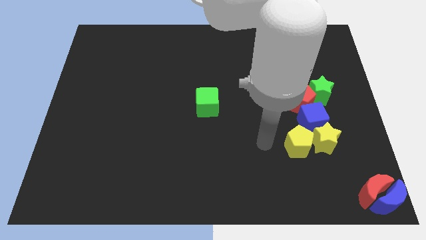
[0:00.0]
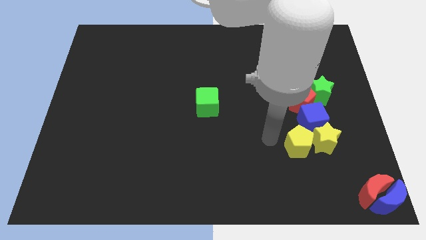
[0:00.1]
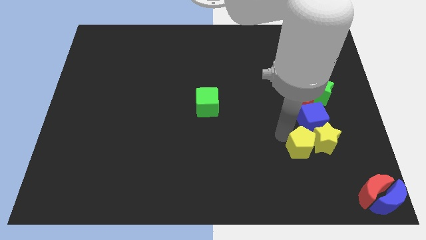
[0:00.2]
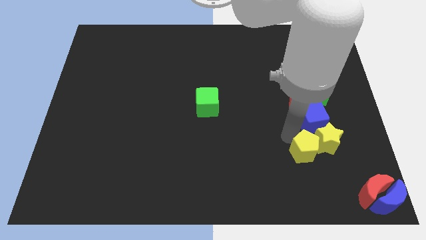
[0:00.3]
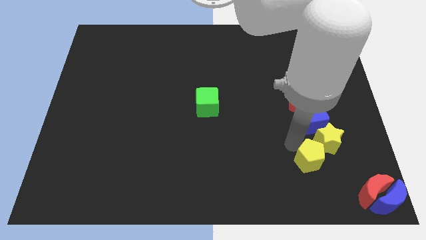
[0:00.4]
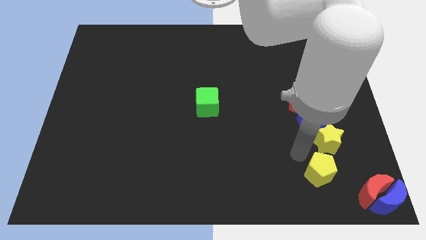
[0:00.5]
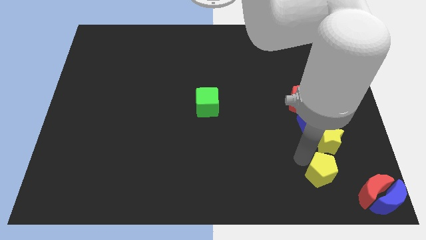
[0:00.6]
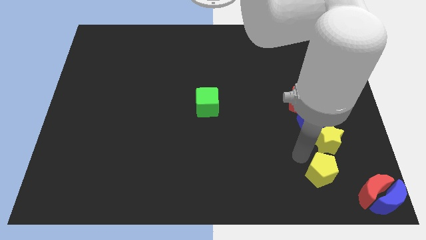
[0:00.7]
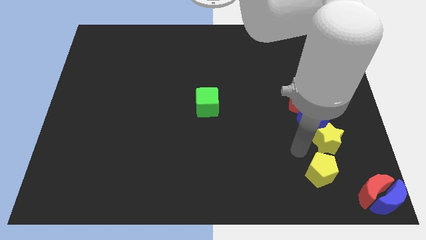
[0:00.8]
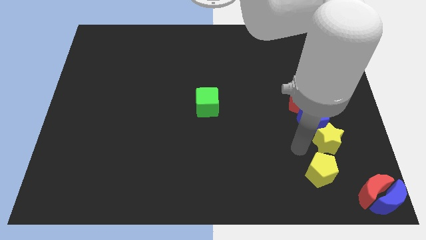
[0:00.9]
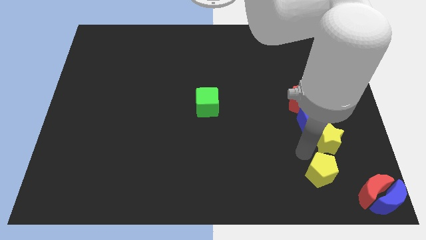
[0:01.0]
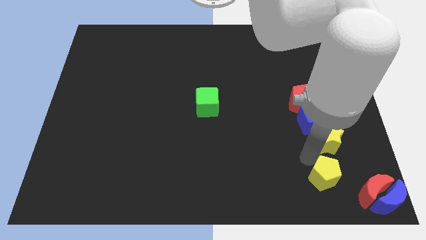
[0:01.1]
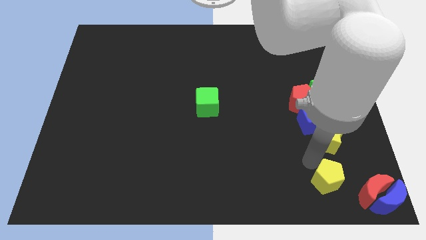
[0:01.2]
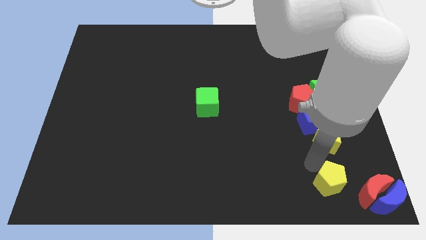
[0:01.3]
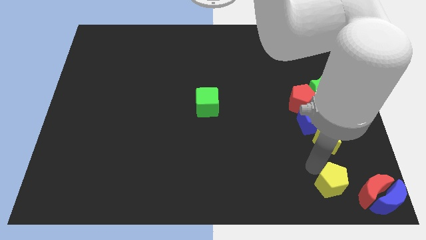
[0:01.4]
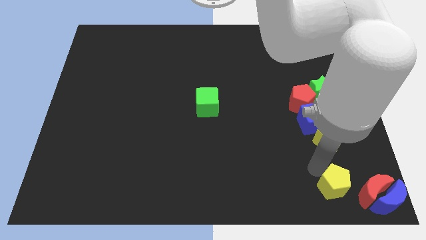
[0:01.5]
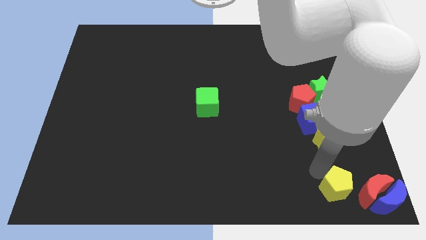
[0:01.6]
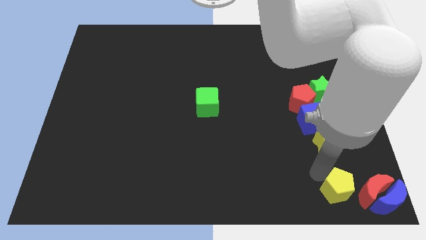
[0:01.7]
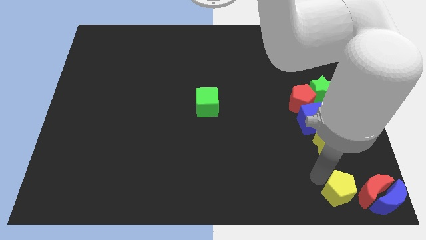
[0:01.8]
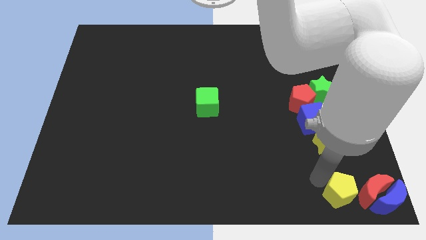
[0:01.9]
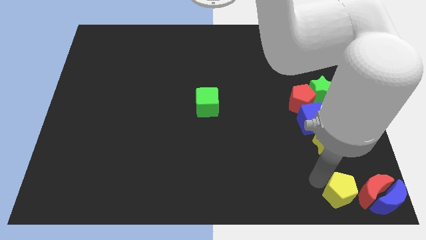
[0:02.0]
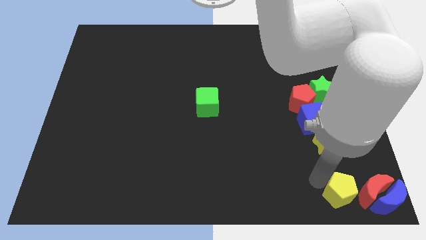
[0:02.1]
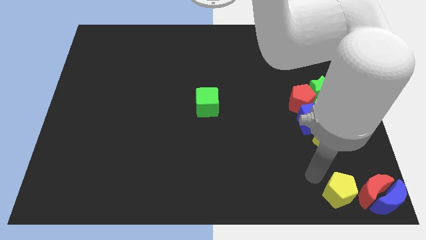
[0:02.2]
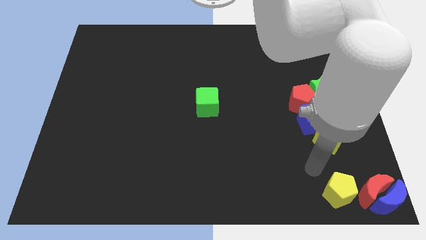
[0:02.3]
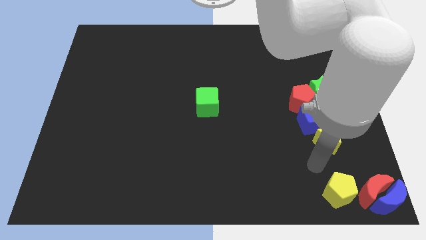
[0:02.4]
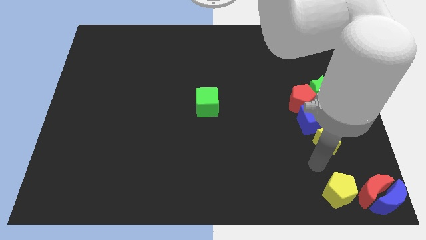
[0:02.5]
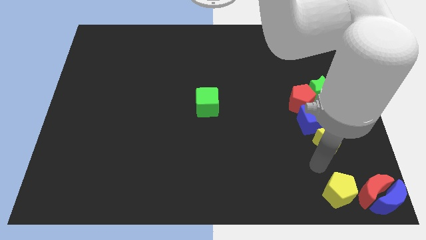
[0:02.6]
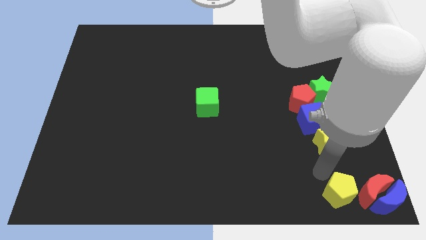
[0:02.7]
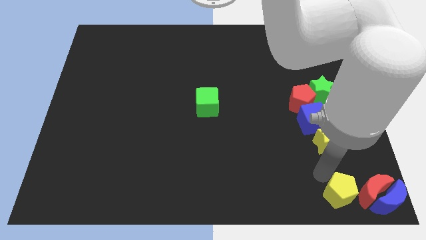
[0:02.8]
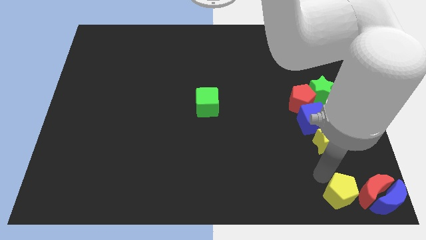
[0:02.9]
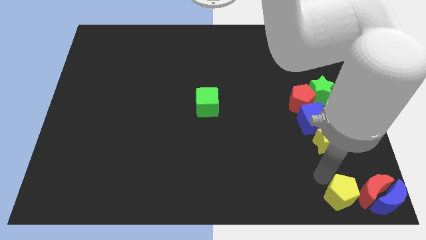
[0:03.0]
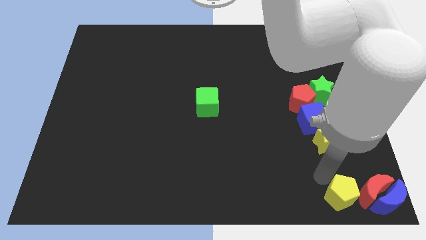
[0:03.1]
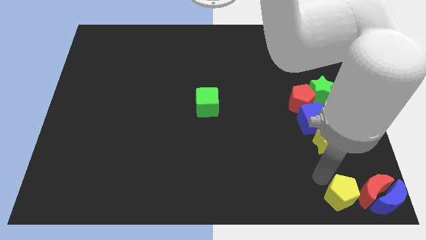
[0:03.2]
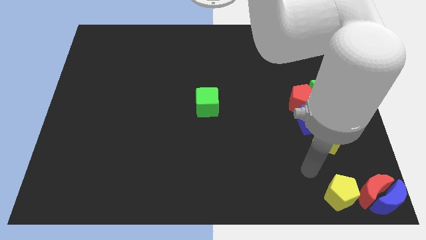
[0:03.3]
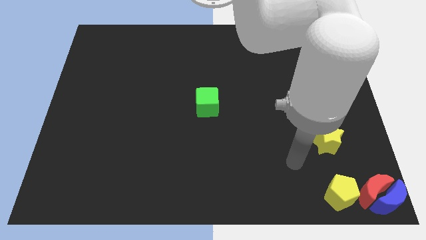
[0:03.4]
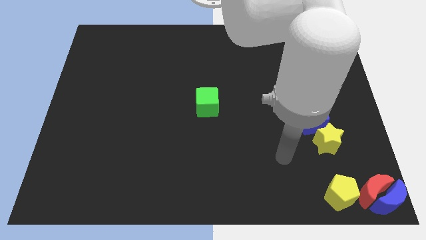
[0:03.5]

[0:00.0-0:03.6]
move the yellow pentagon left to red crescent

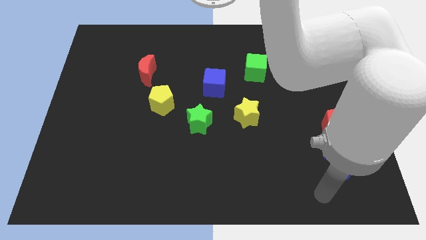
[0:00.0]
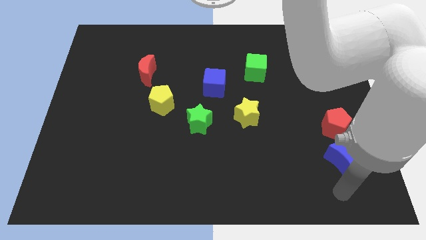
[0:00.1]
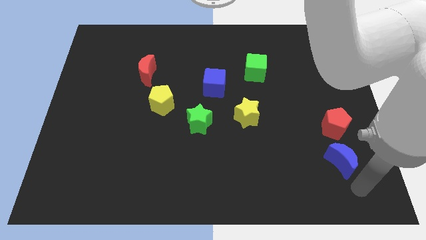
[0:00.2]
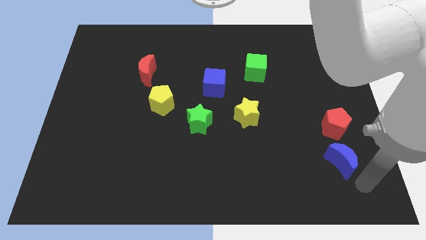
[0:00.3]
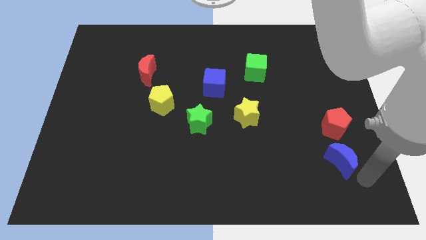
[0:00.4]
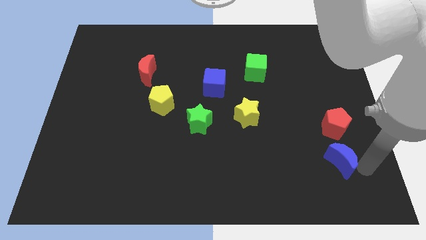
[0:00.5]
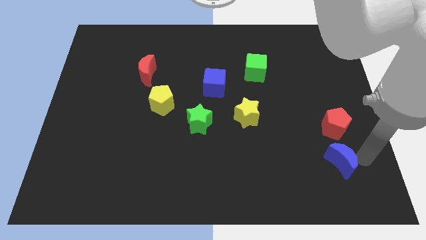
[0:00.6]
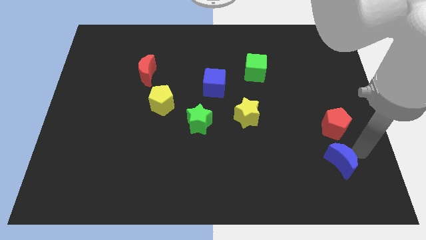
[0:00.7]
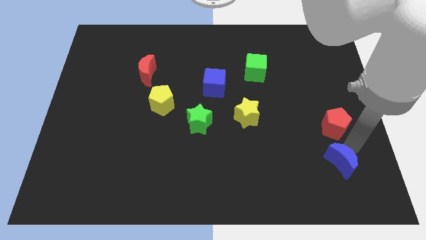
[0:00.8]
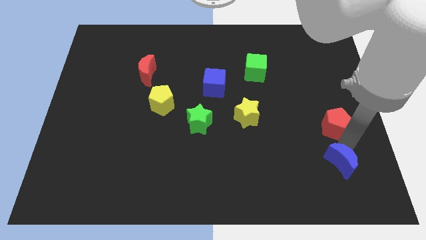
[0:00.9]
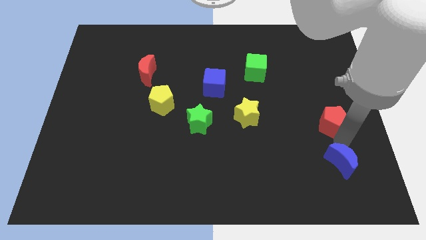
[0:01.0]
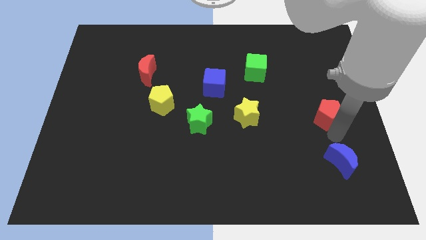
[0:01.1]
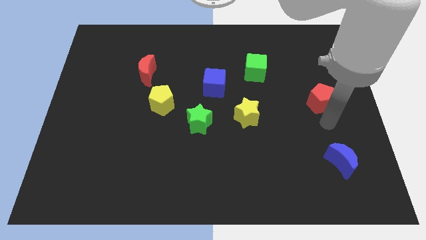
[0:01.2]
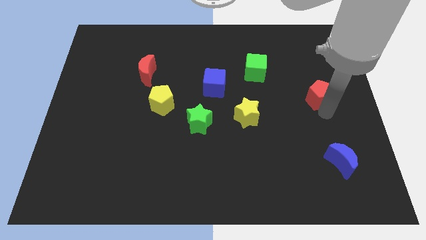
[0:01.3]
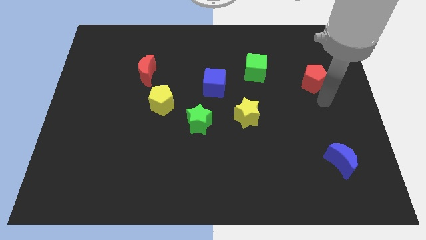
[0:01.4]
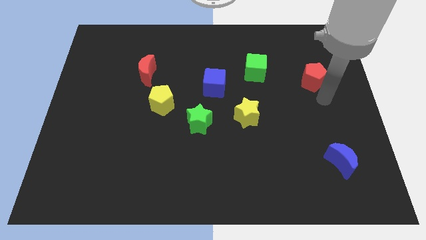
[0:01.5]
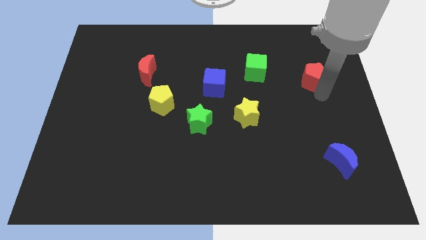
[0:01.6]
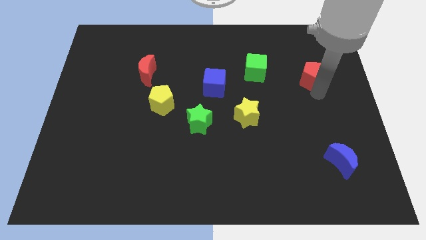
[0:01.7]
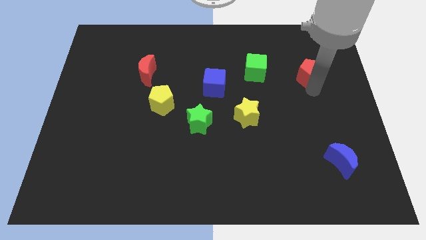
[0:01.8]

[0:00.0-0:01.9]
move the red crescent to the right of the green cube

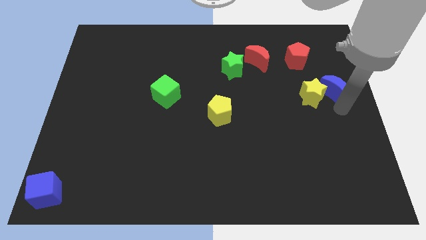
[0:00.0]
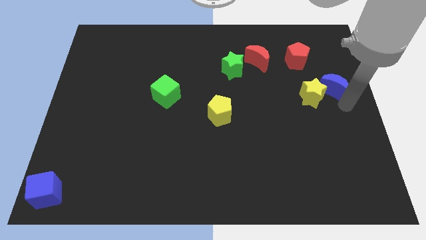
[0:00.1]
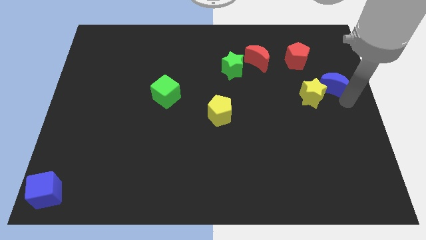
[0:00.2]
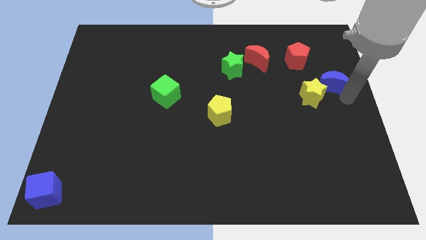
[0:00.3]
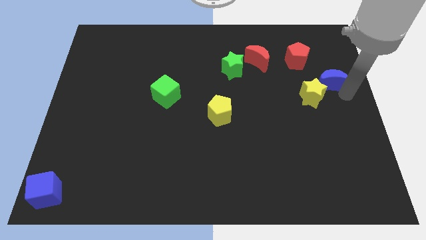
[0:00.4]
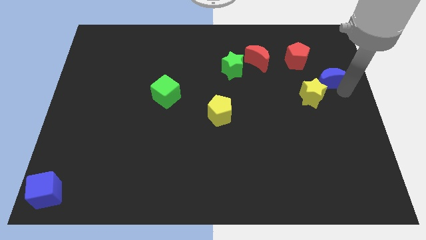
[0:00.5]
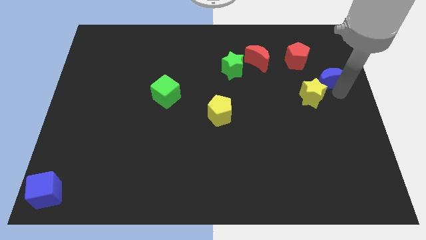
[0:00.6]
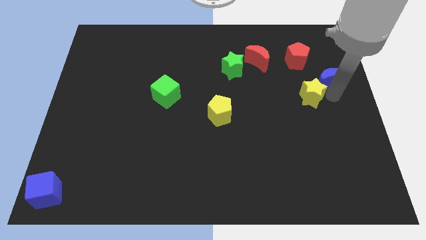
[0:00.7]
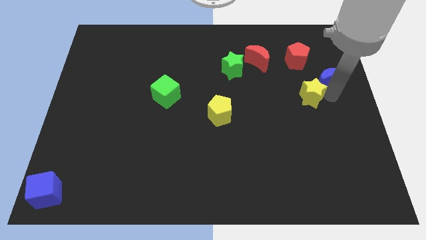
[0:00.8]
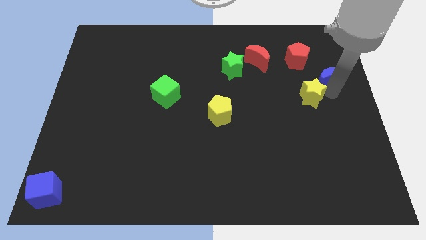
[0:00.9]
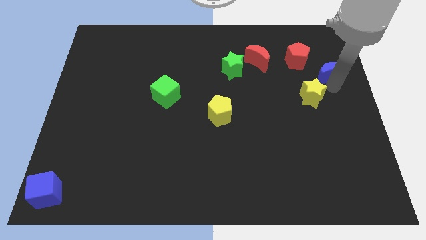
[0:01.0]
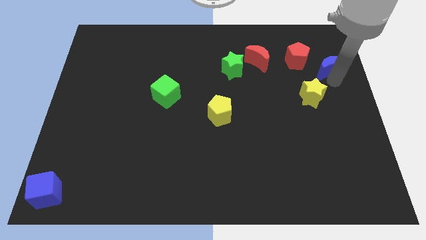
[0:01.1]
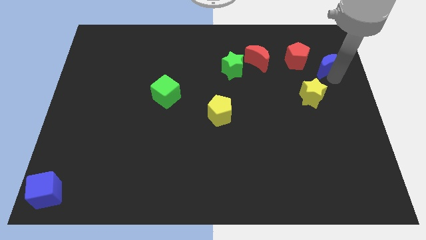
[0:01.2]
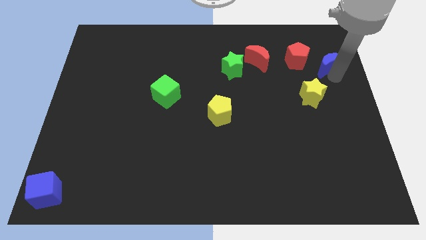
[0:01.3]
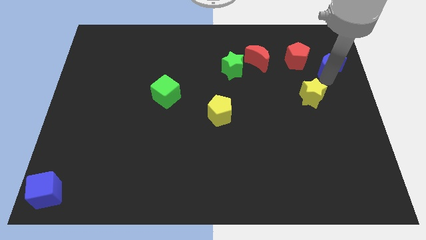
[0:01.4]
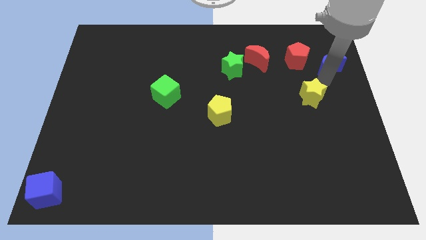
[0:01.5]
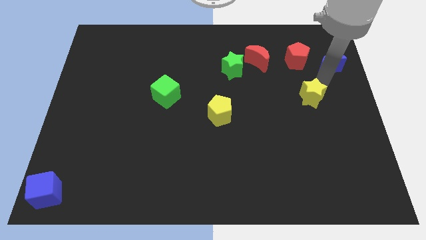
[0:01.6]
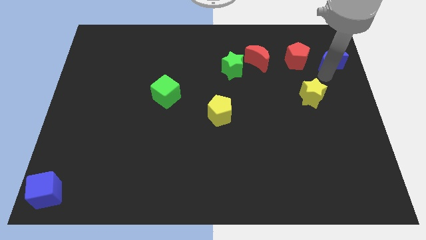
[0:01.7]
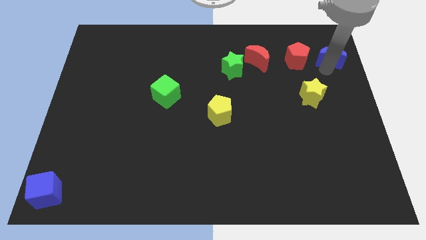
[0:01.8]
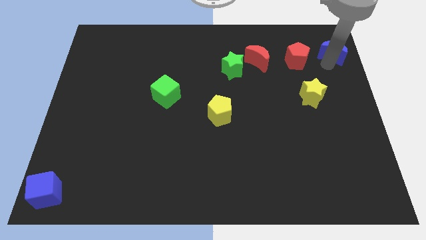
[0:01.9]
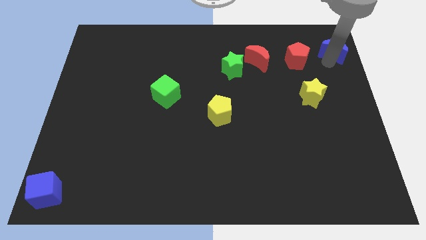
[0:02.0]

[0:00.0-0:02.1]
move blue moon towards the red pentagon

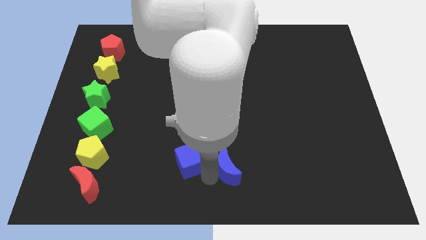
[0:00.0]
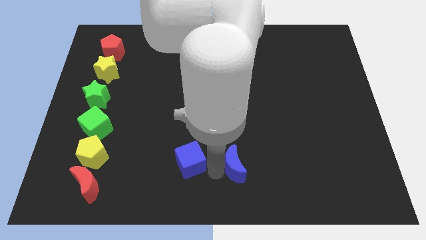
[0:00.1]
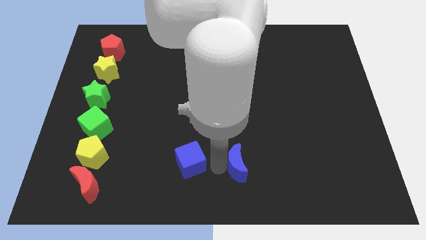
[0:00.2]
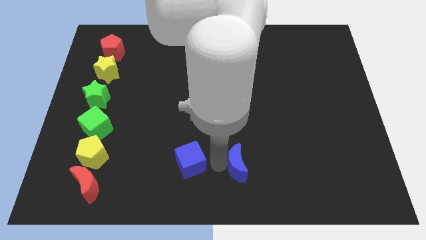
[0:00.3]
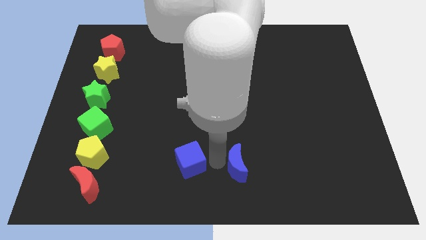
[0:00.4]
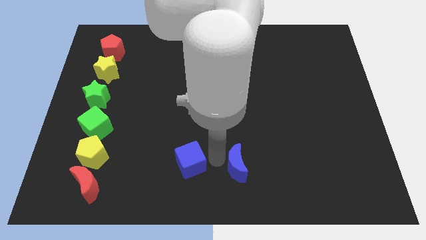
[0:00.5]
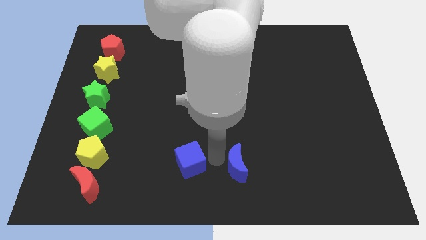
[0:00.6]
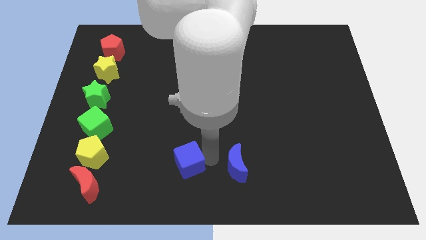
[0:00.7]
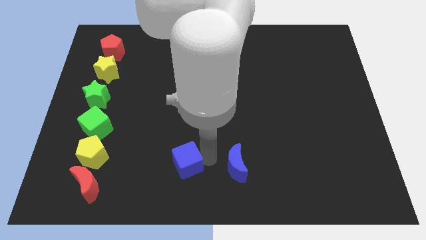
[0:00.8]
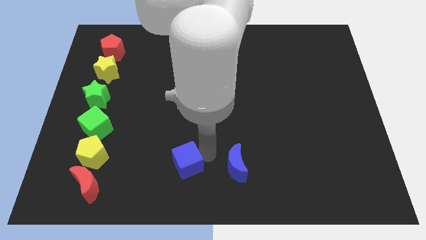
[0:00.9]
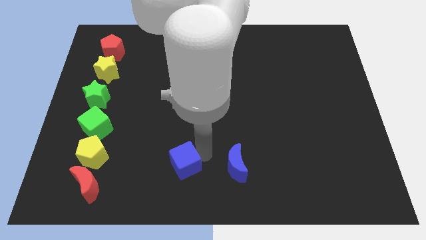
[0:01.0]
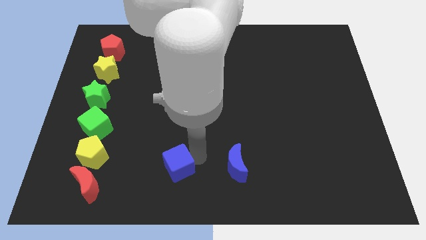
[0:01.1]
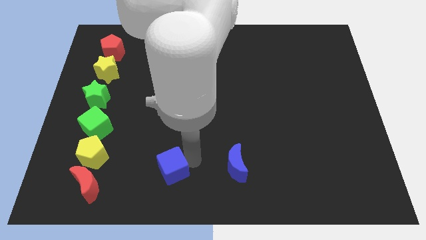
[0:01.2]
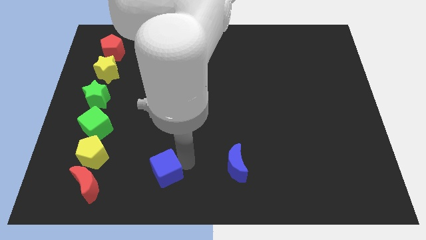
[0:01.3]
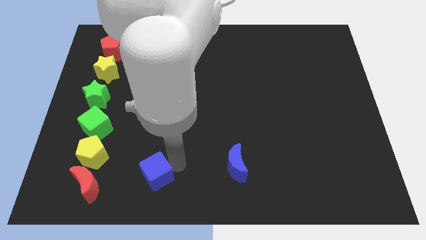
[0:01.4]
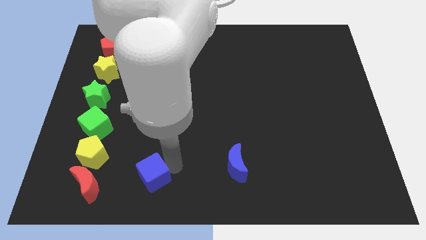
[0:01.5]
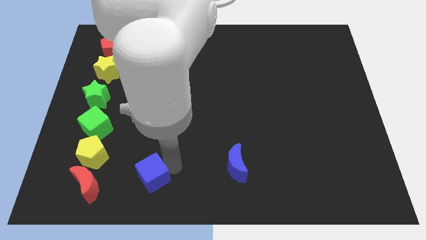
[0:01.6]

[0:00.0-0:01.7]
separate the blue cube from blue crescent
